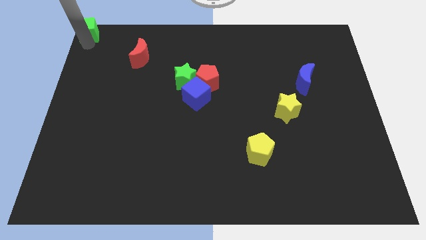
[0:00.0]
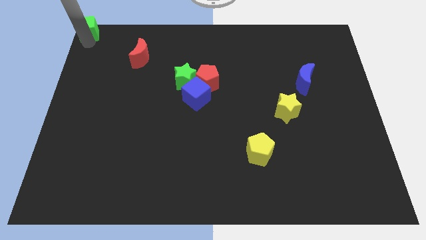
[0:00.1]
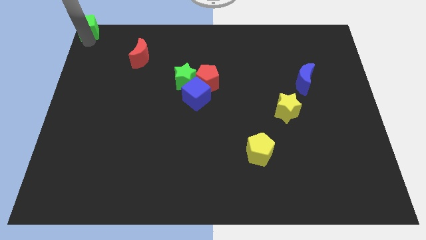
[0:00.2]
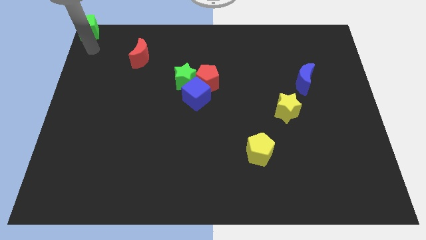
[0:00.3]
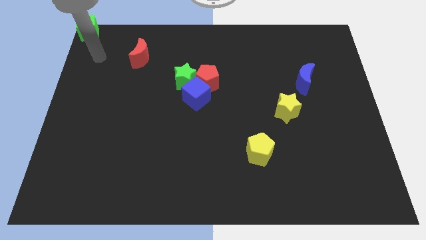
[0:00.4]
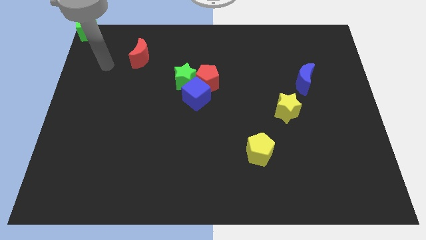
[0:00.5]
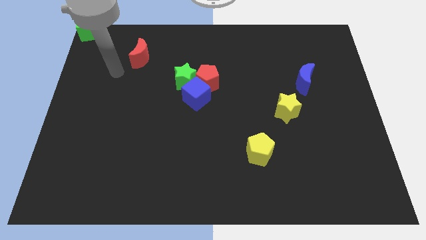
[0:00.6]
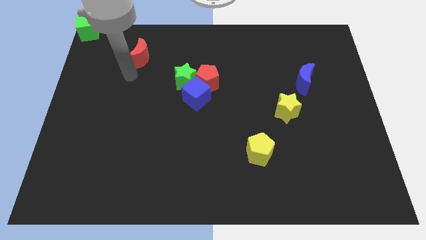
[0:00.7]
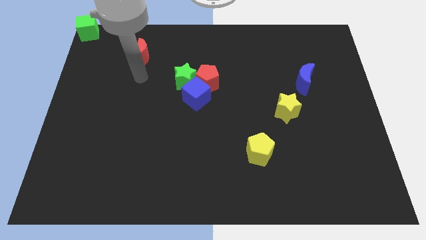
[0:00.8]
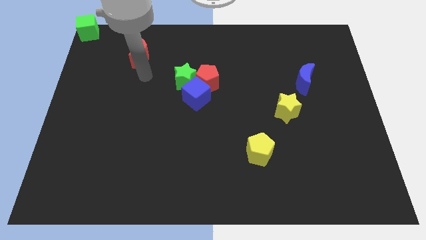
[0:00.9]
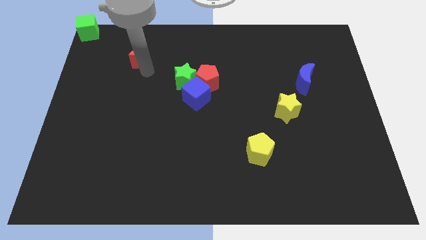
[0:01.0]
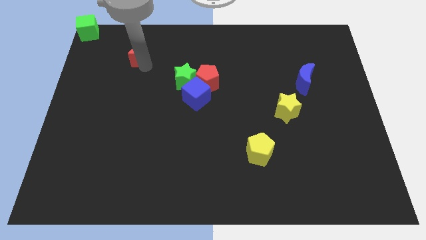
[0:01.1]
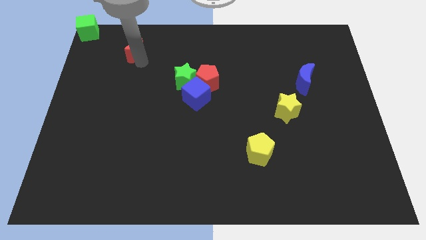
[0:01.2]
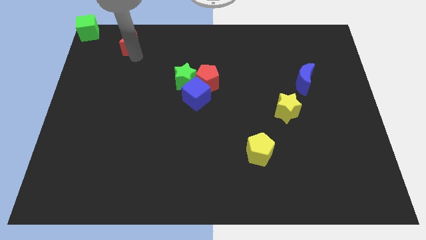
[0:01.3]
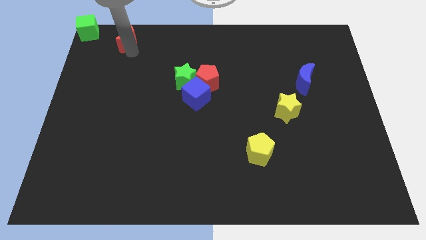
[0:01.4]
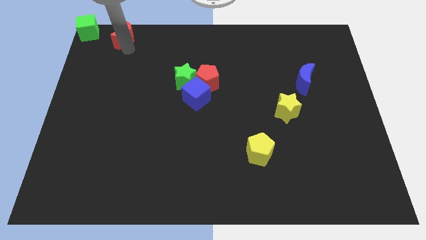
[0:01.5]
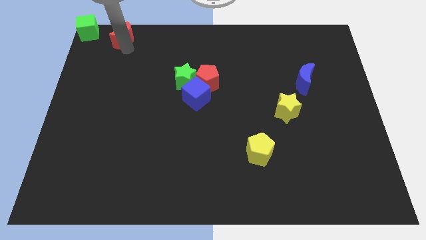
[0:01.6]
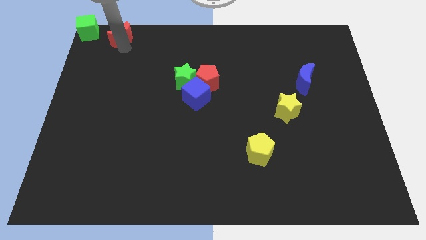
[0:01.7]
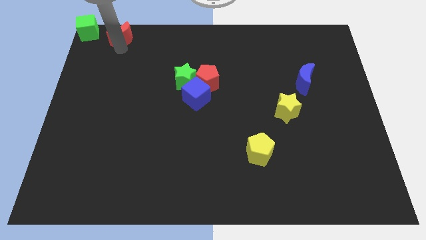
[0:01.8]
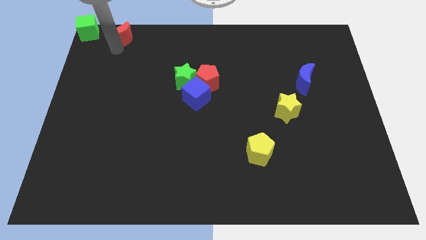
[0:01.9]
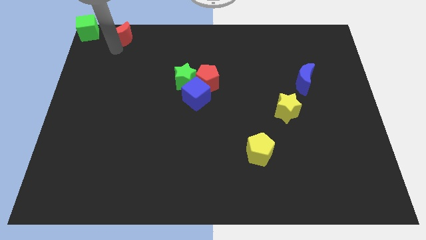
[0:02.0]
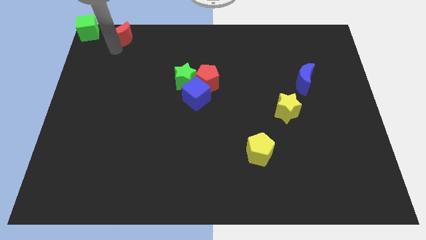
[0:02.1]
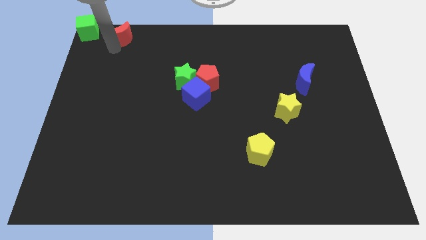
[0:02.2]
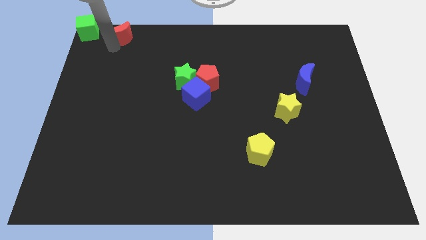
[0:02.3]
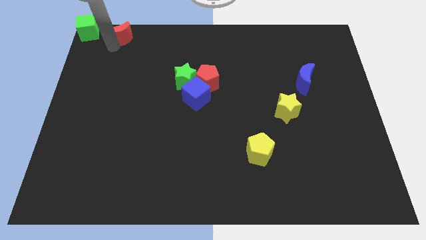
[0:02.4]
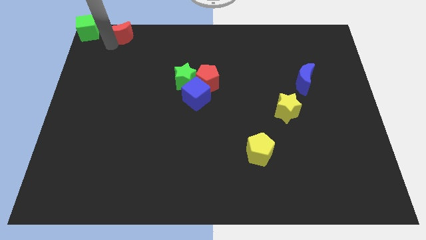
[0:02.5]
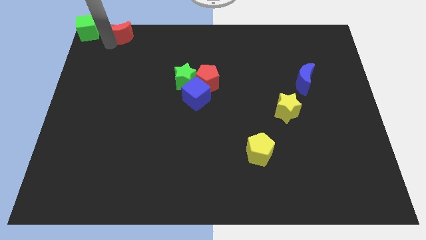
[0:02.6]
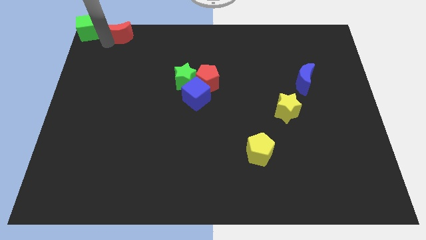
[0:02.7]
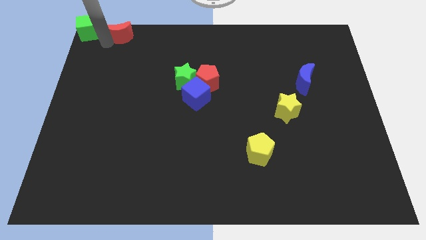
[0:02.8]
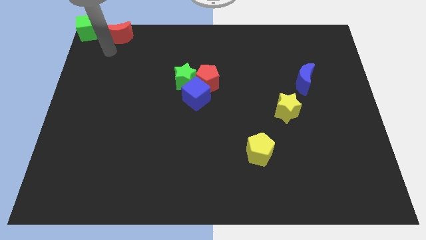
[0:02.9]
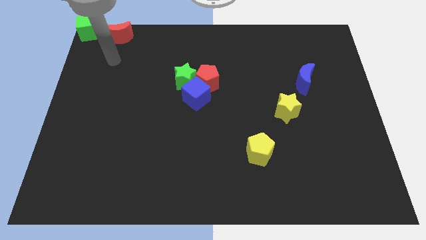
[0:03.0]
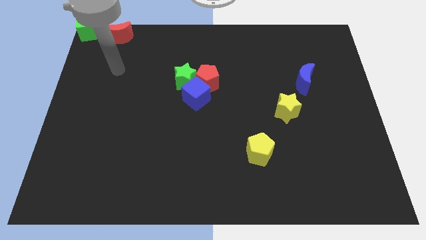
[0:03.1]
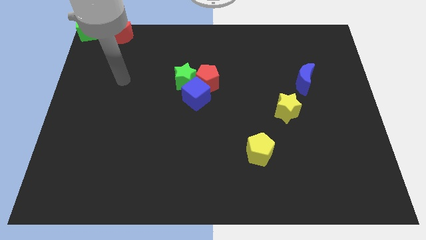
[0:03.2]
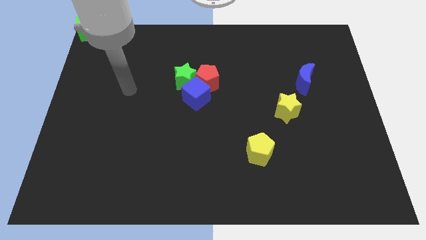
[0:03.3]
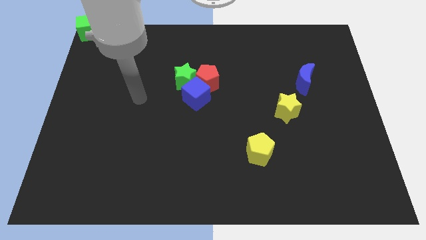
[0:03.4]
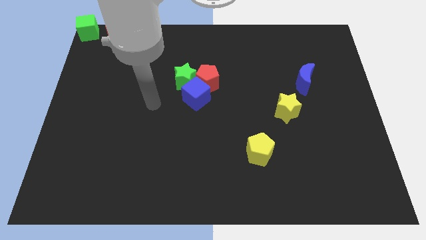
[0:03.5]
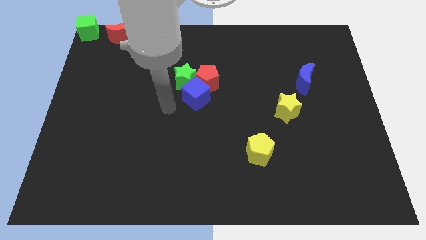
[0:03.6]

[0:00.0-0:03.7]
place the red crescent to the right side of the green cube

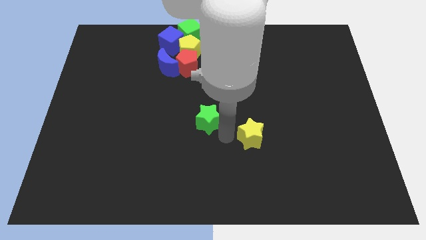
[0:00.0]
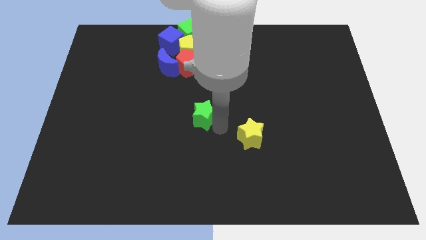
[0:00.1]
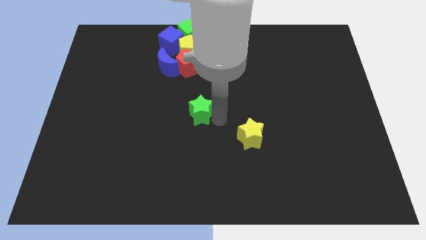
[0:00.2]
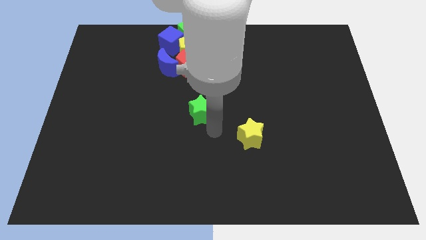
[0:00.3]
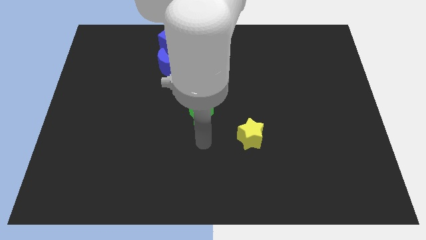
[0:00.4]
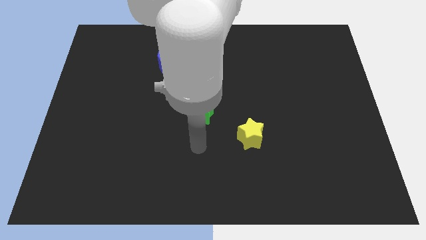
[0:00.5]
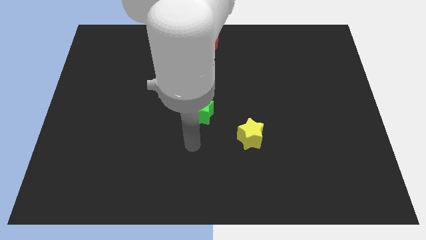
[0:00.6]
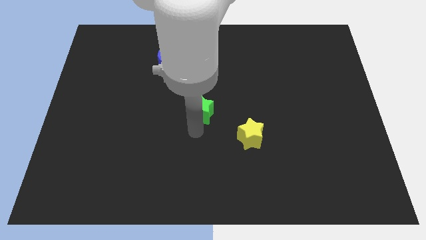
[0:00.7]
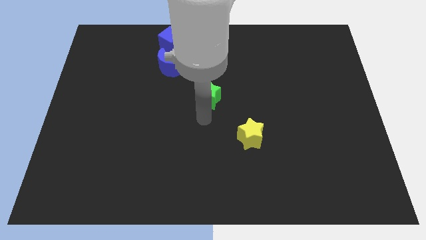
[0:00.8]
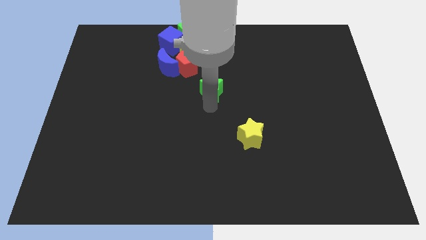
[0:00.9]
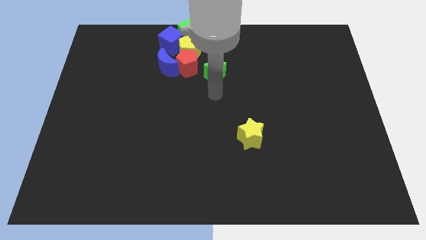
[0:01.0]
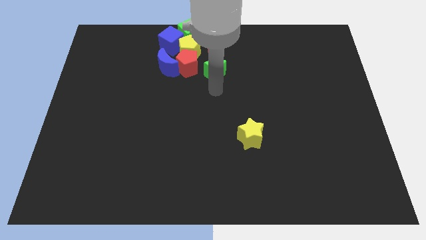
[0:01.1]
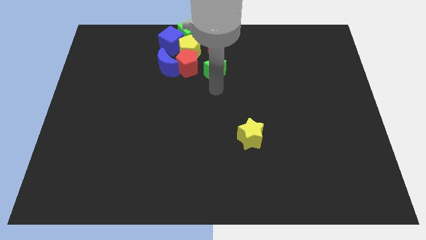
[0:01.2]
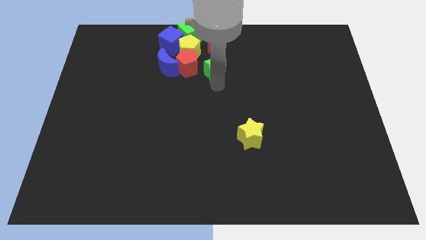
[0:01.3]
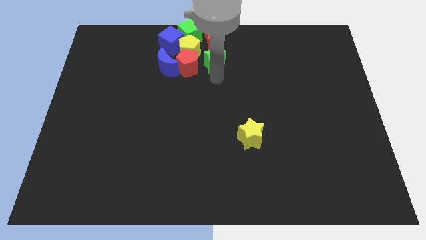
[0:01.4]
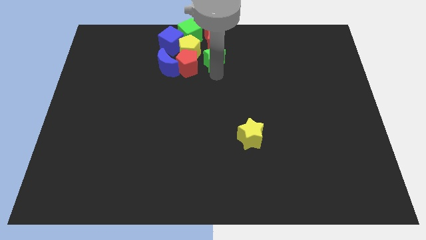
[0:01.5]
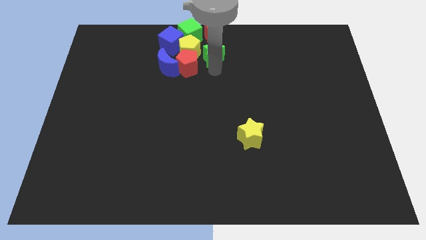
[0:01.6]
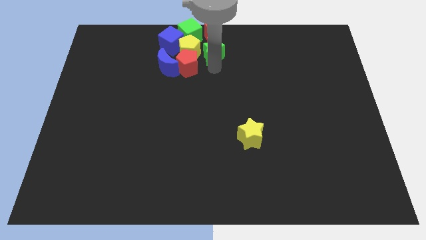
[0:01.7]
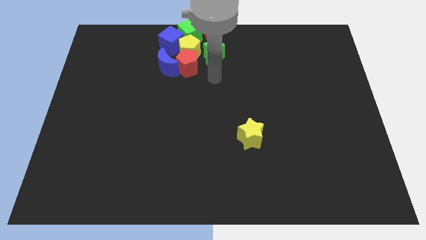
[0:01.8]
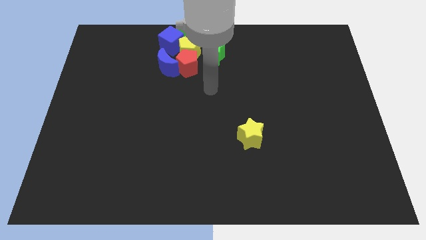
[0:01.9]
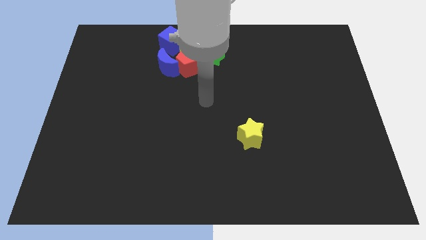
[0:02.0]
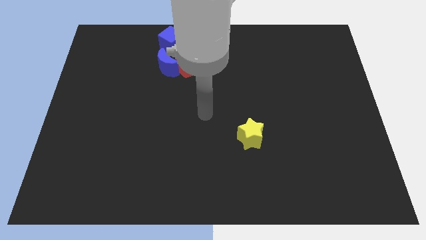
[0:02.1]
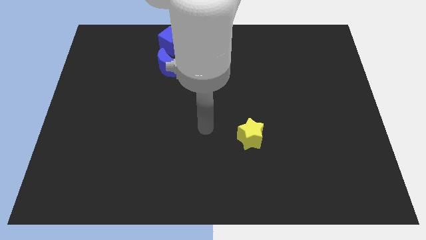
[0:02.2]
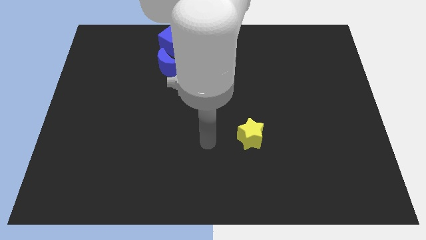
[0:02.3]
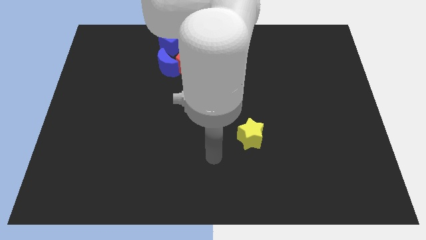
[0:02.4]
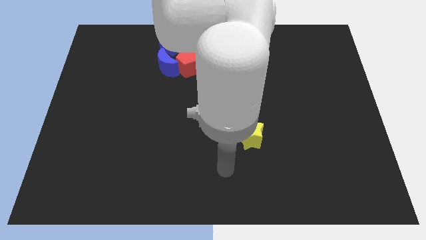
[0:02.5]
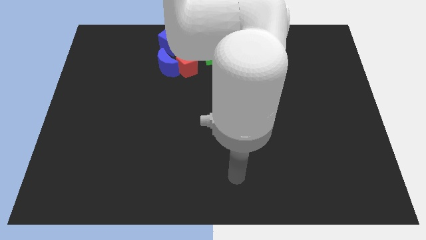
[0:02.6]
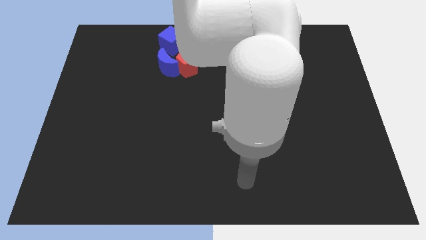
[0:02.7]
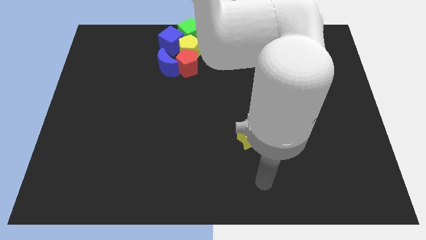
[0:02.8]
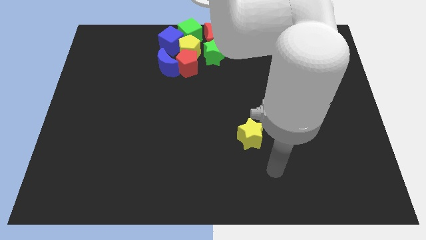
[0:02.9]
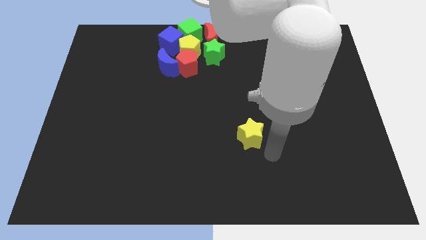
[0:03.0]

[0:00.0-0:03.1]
push the green star close to the group of blocks

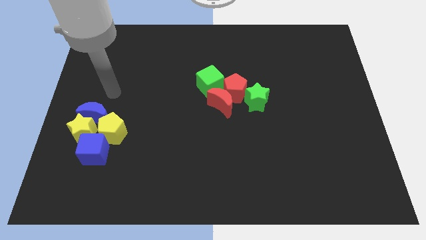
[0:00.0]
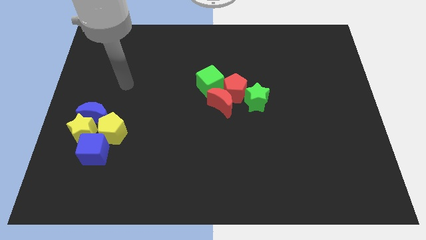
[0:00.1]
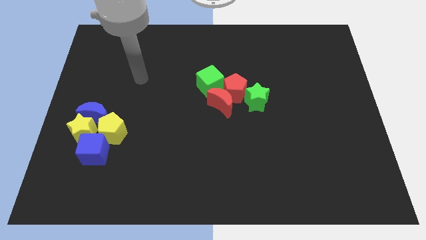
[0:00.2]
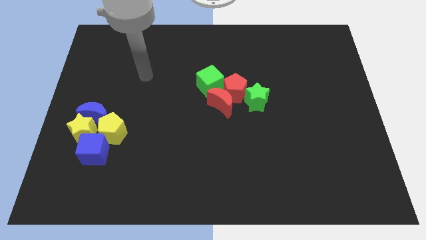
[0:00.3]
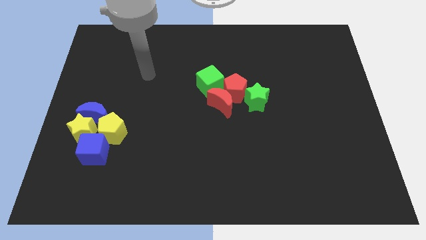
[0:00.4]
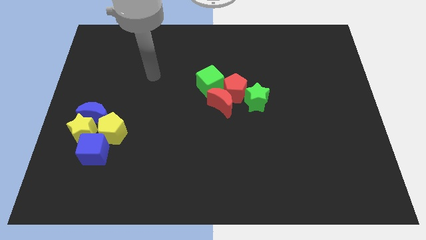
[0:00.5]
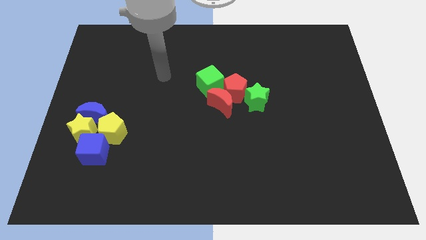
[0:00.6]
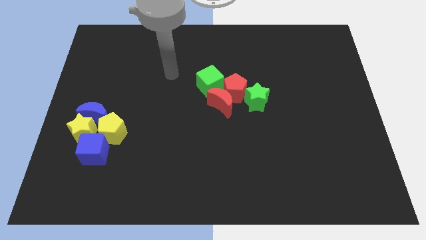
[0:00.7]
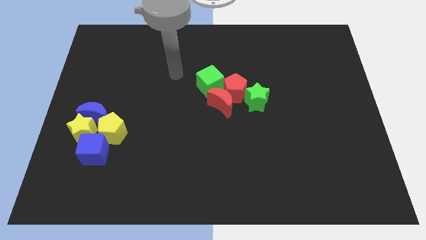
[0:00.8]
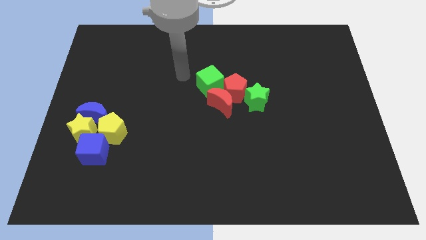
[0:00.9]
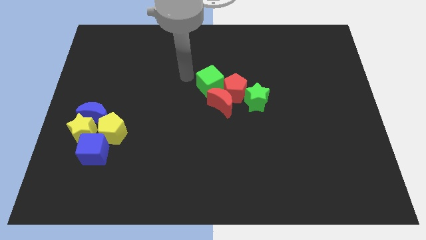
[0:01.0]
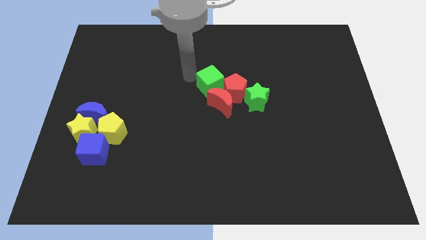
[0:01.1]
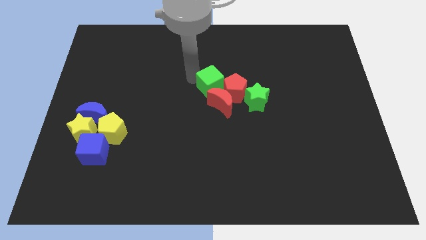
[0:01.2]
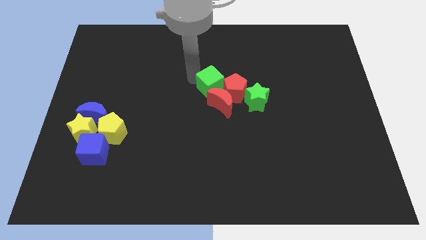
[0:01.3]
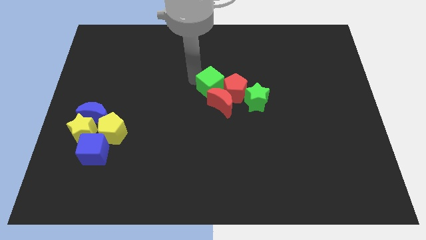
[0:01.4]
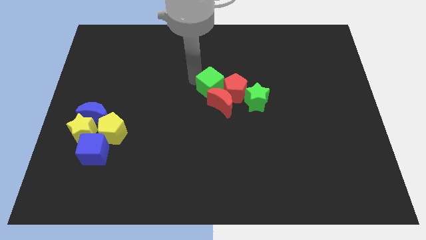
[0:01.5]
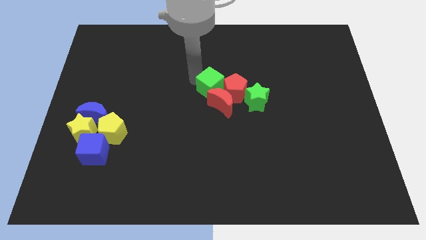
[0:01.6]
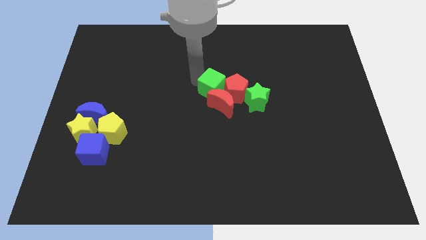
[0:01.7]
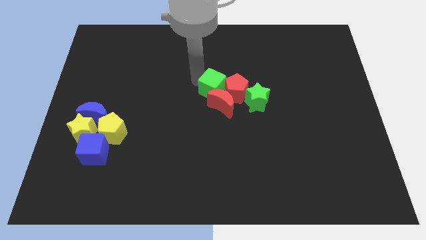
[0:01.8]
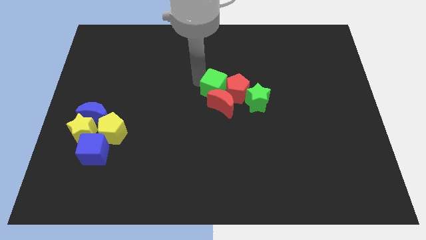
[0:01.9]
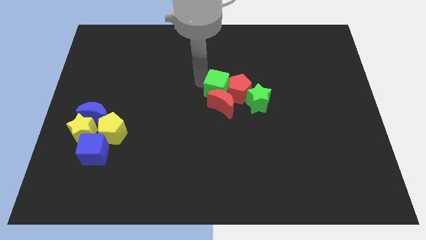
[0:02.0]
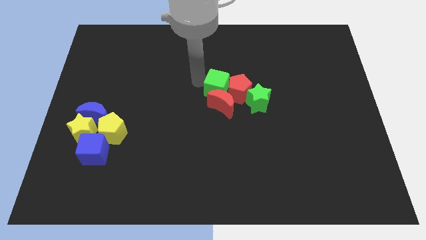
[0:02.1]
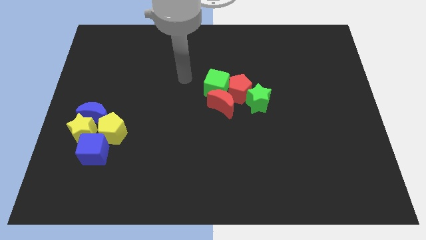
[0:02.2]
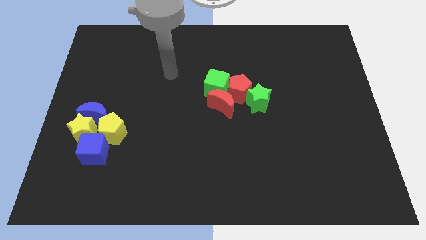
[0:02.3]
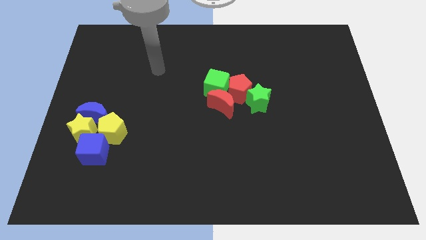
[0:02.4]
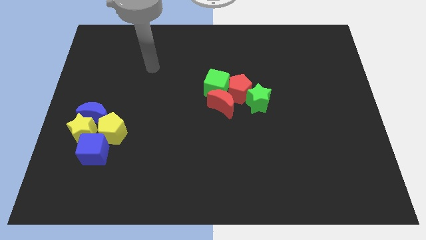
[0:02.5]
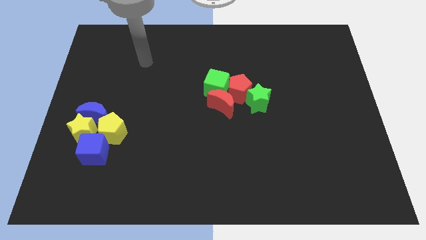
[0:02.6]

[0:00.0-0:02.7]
push the green cube into the red blocks
